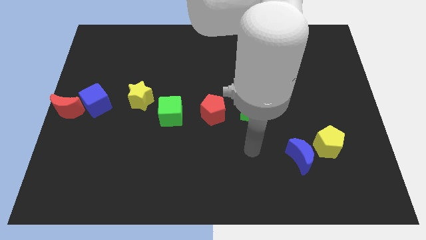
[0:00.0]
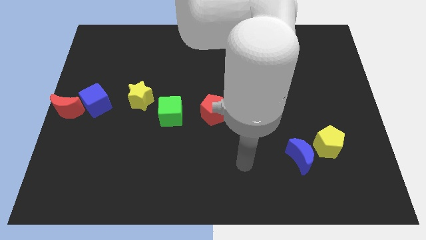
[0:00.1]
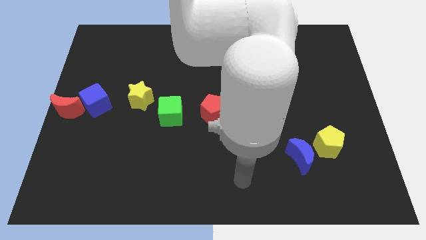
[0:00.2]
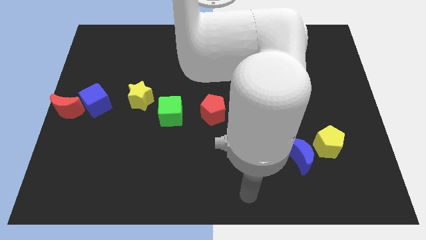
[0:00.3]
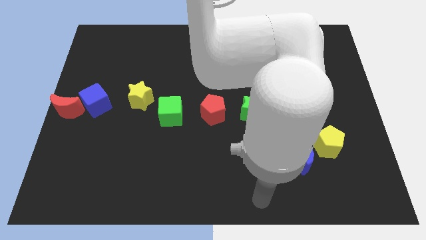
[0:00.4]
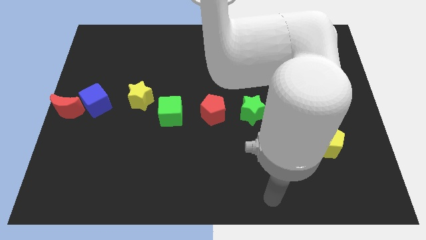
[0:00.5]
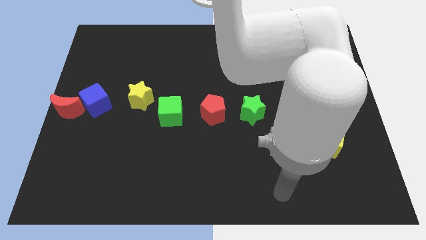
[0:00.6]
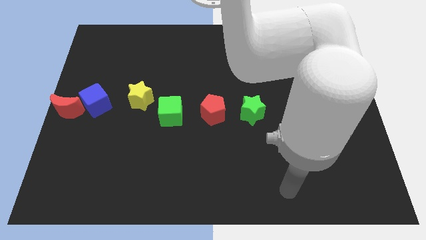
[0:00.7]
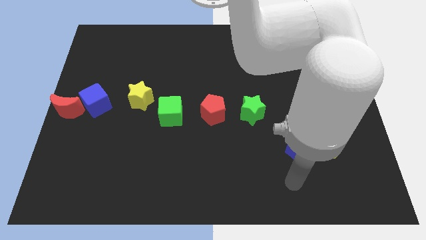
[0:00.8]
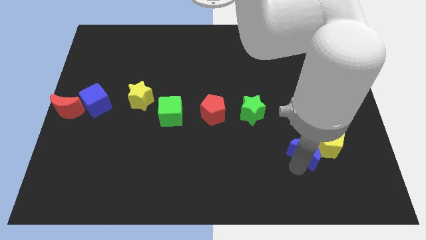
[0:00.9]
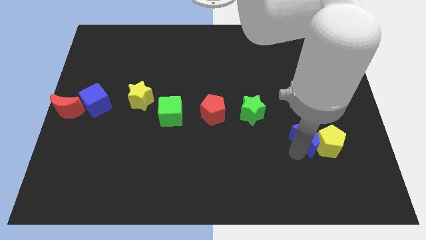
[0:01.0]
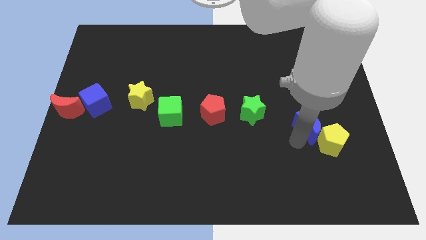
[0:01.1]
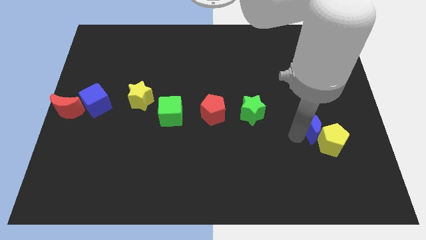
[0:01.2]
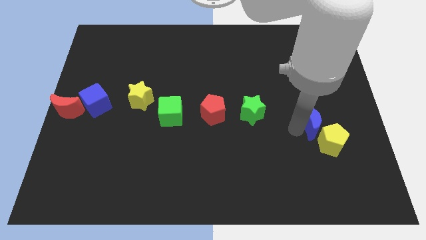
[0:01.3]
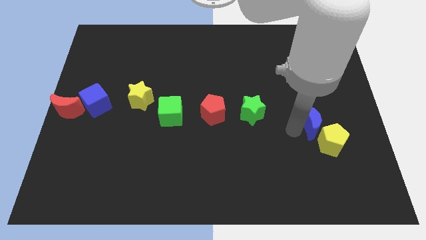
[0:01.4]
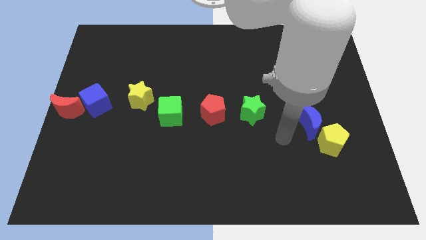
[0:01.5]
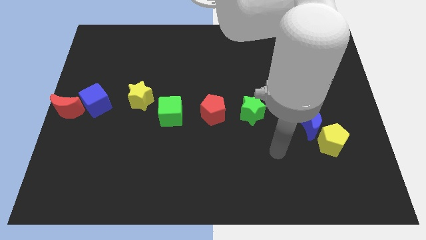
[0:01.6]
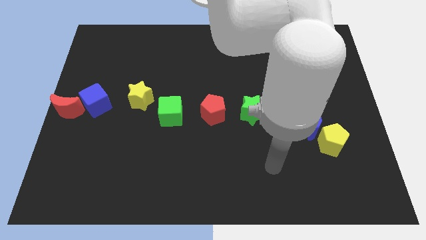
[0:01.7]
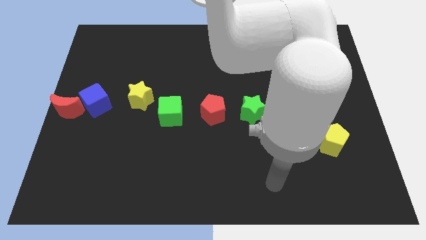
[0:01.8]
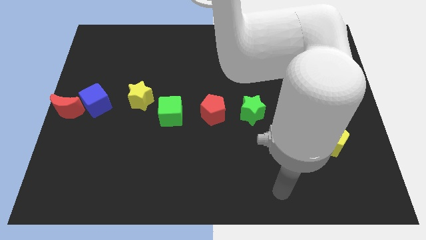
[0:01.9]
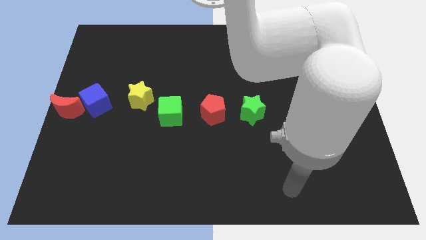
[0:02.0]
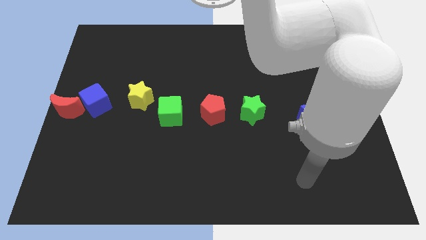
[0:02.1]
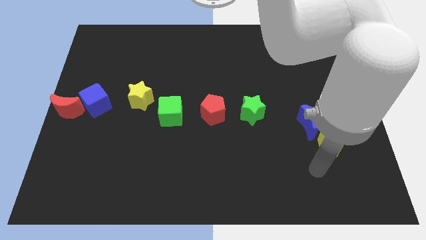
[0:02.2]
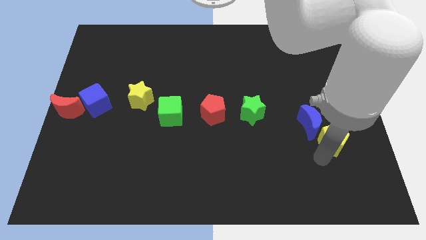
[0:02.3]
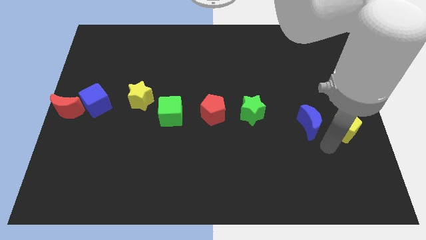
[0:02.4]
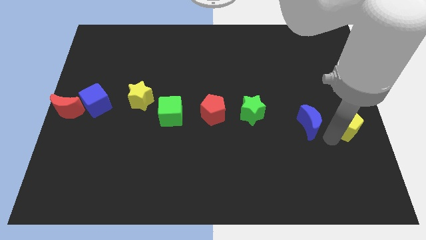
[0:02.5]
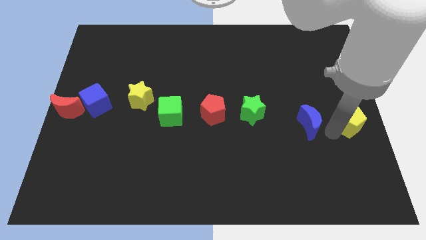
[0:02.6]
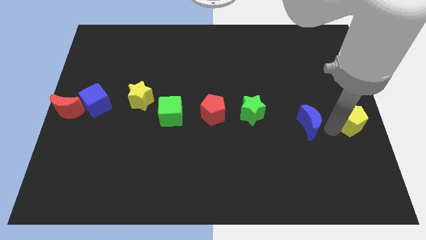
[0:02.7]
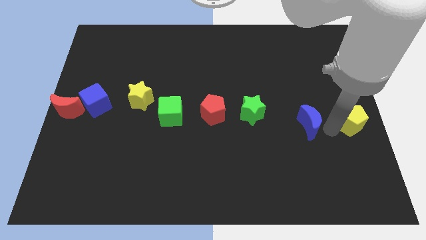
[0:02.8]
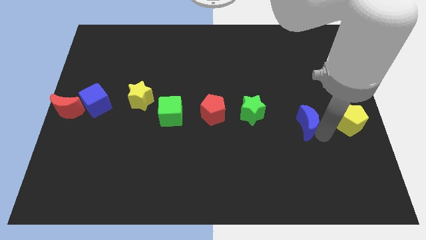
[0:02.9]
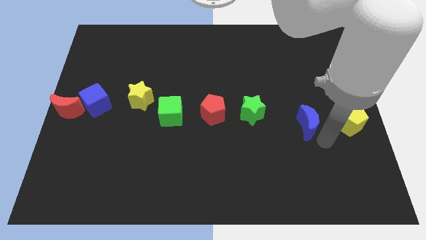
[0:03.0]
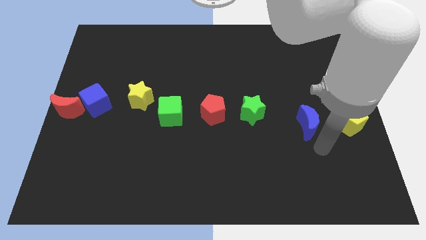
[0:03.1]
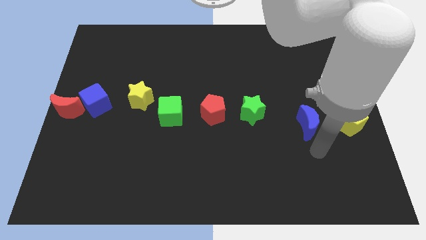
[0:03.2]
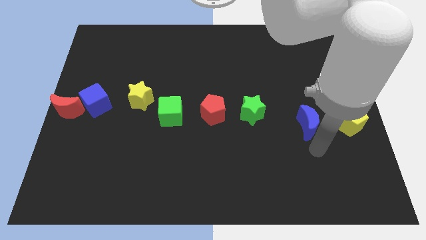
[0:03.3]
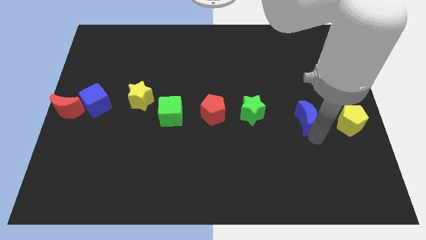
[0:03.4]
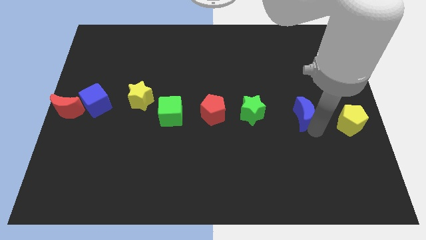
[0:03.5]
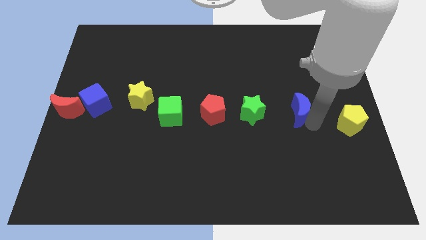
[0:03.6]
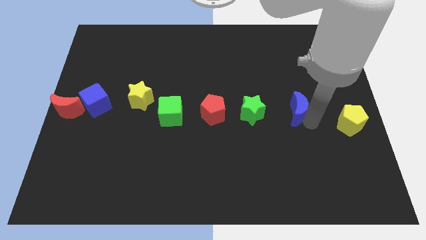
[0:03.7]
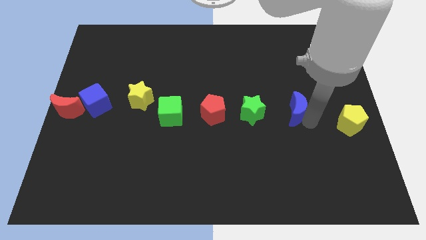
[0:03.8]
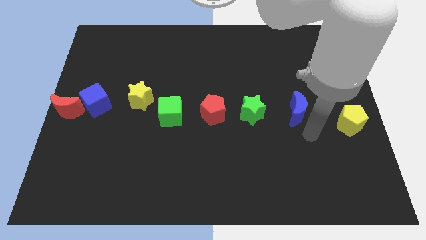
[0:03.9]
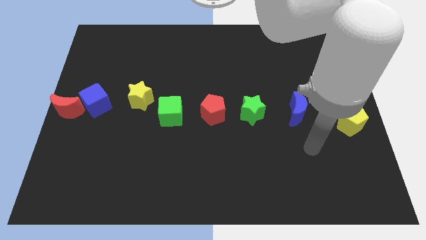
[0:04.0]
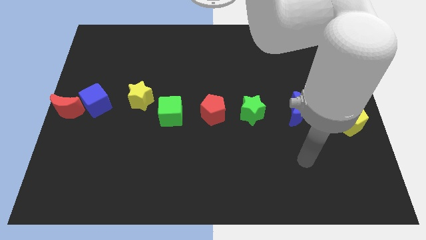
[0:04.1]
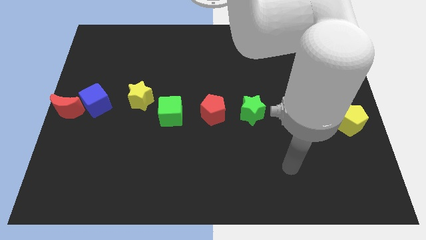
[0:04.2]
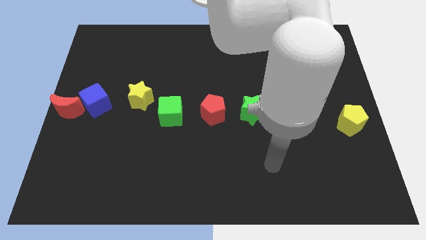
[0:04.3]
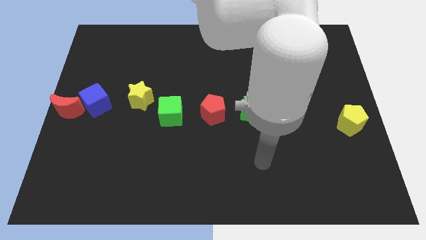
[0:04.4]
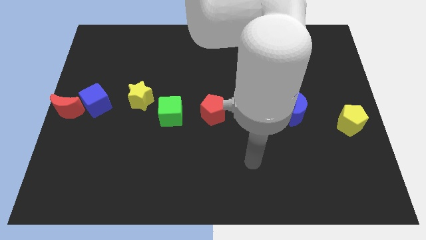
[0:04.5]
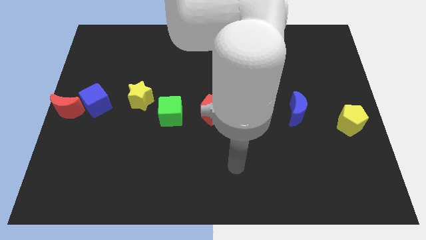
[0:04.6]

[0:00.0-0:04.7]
separate blue moon from the yellow pentagon

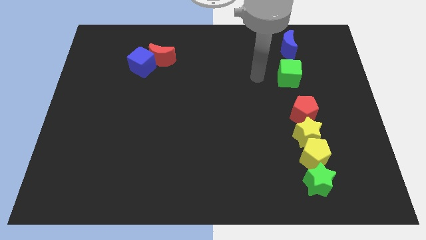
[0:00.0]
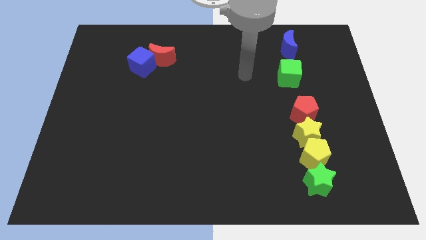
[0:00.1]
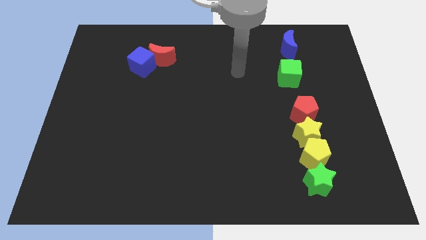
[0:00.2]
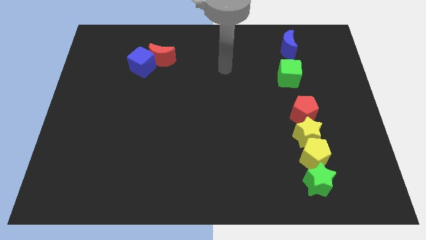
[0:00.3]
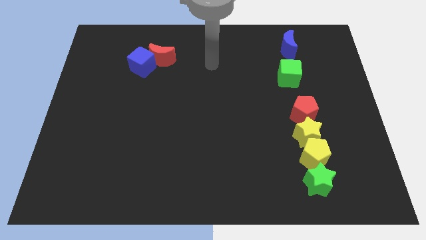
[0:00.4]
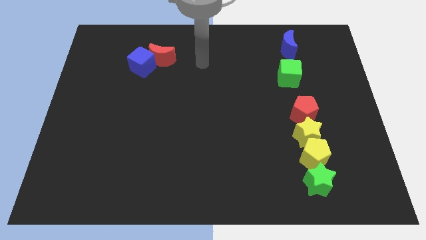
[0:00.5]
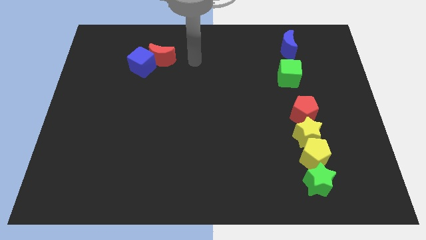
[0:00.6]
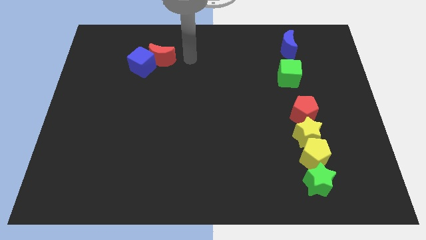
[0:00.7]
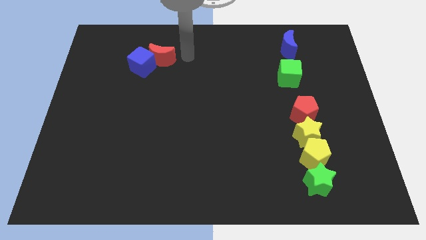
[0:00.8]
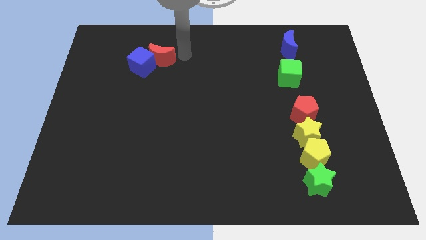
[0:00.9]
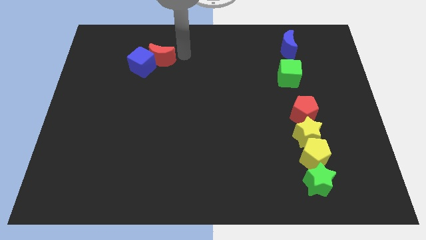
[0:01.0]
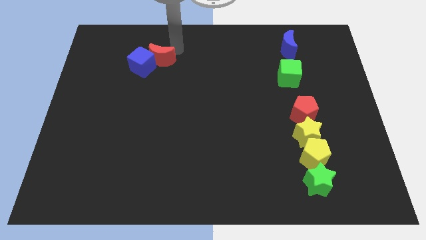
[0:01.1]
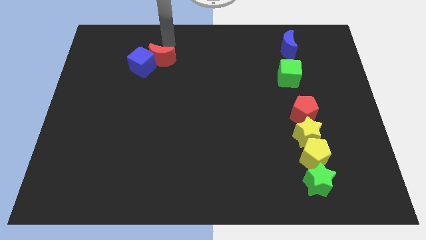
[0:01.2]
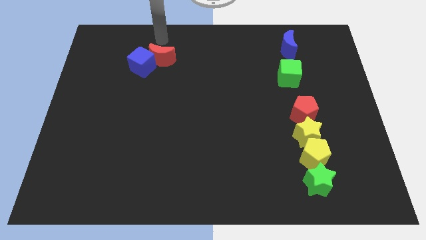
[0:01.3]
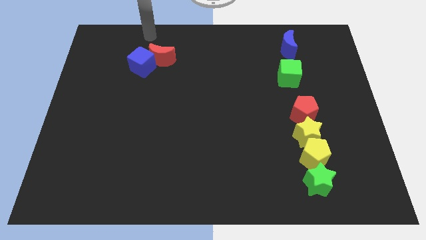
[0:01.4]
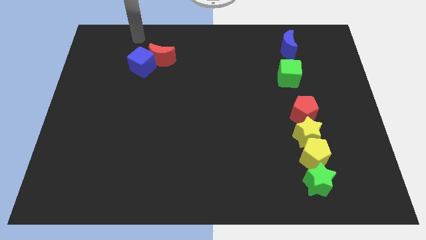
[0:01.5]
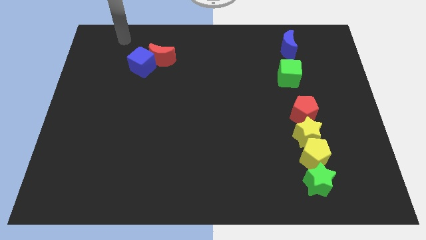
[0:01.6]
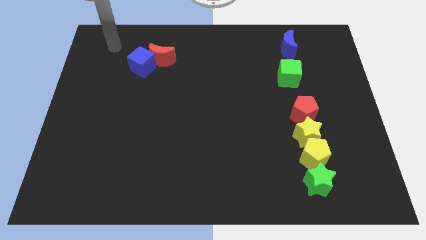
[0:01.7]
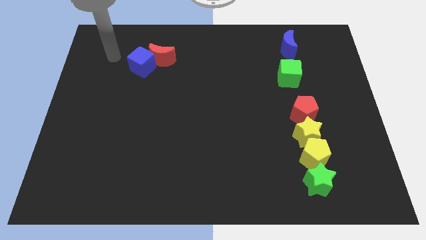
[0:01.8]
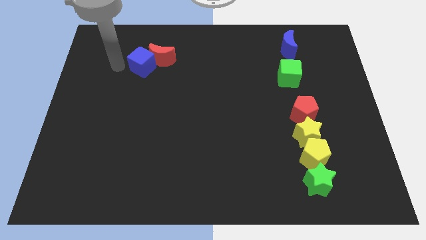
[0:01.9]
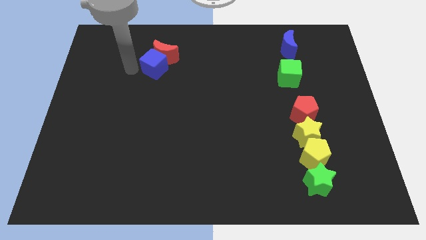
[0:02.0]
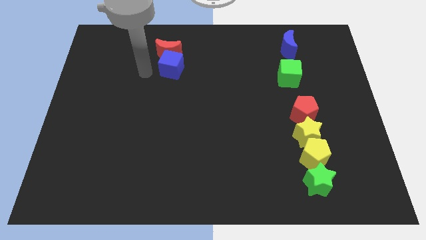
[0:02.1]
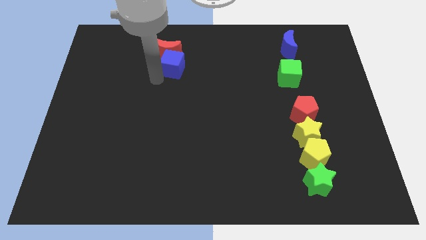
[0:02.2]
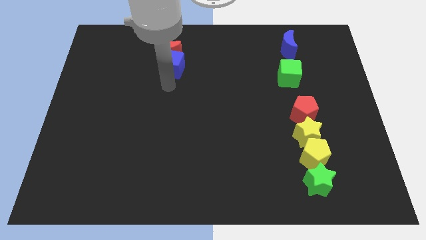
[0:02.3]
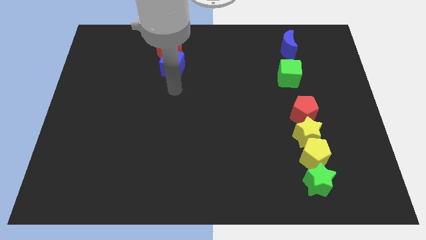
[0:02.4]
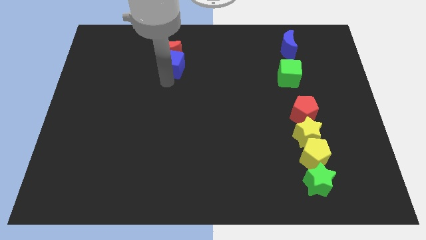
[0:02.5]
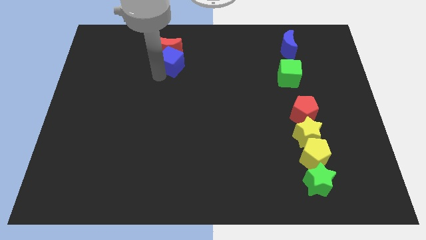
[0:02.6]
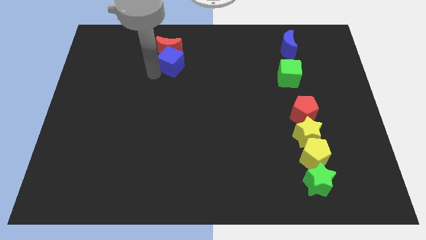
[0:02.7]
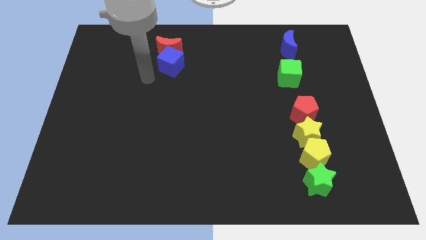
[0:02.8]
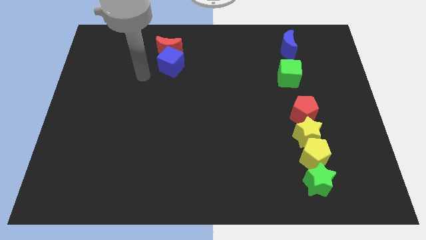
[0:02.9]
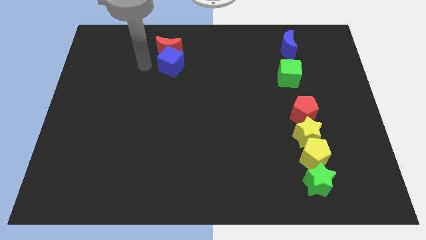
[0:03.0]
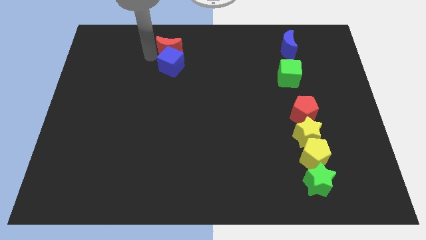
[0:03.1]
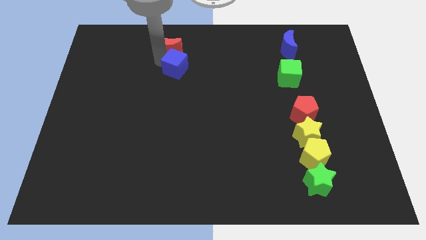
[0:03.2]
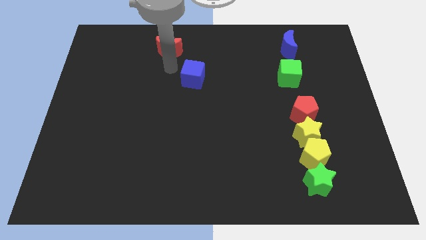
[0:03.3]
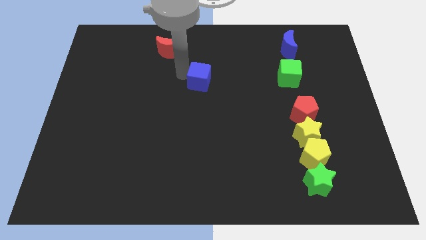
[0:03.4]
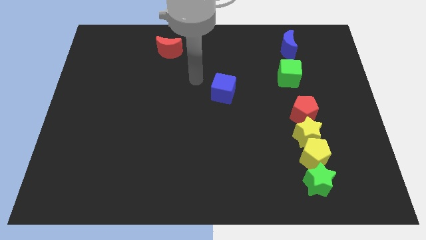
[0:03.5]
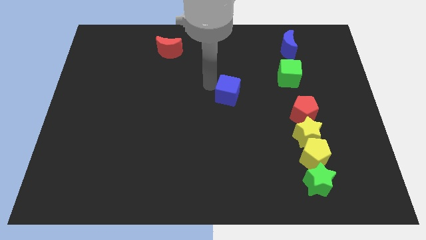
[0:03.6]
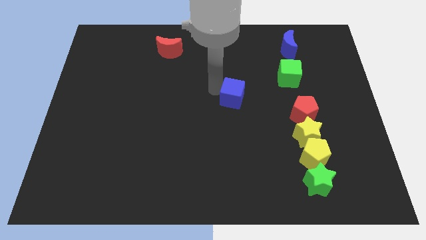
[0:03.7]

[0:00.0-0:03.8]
separate blue cube and the red crescent

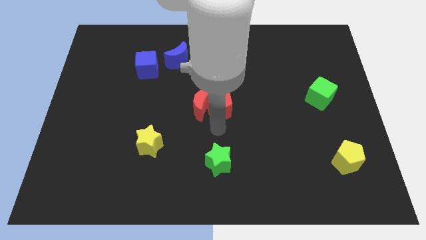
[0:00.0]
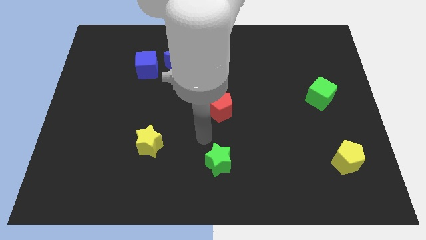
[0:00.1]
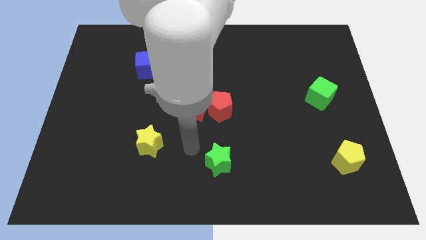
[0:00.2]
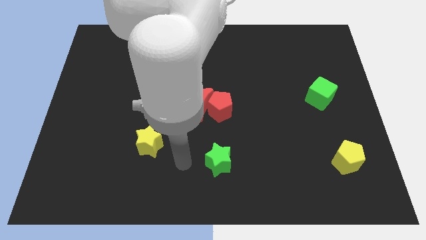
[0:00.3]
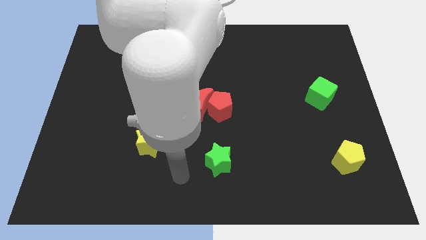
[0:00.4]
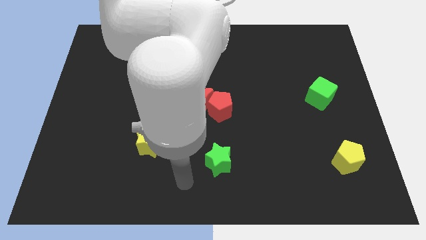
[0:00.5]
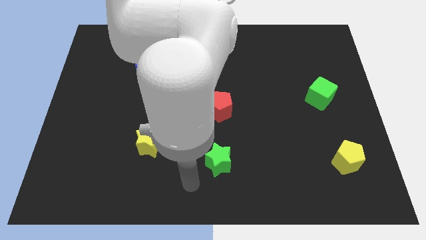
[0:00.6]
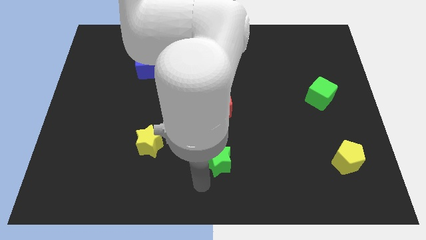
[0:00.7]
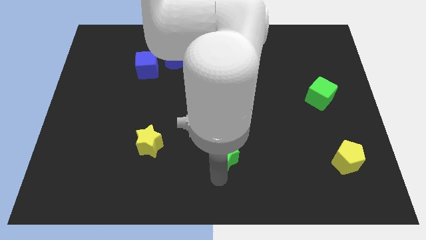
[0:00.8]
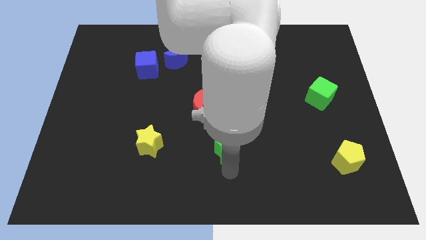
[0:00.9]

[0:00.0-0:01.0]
point your arm at the bottom of the green star
